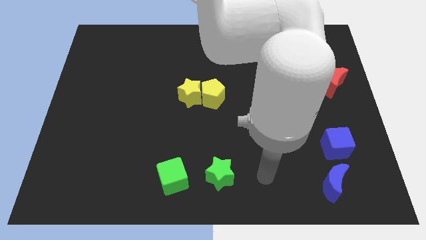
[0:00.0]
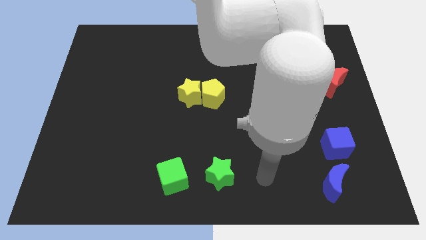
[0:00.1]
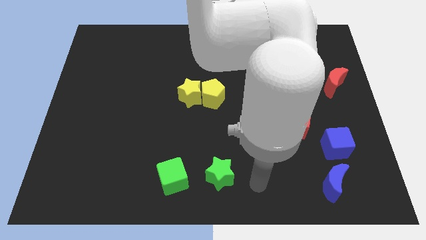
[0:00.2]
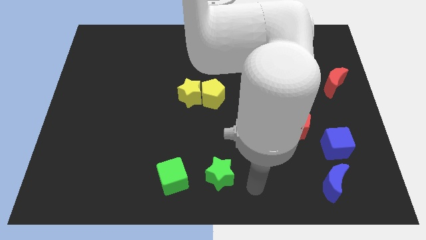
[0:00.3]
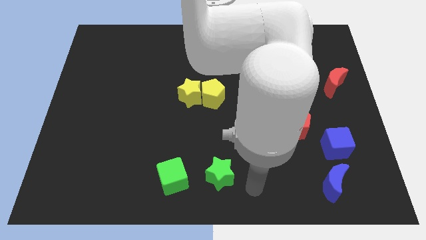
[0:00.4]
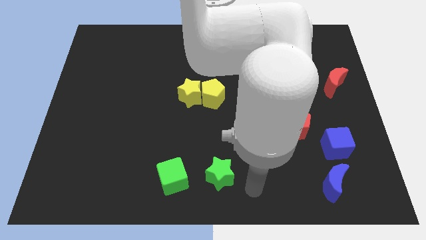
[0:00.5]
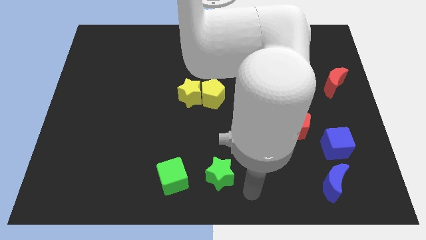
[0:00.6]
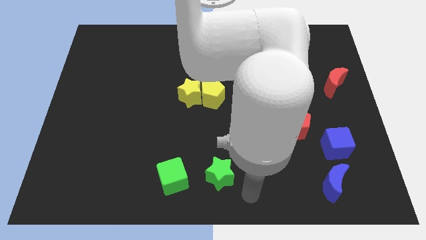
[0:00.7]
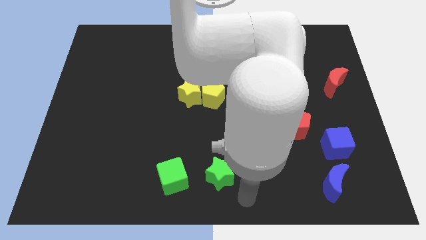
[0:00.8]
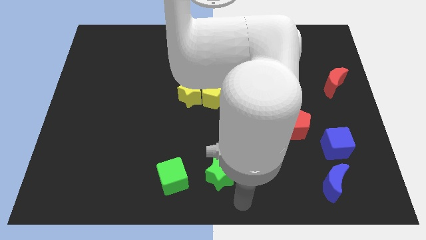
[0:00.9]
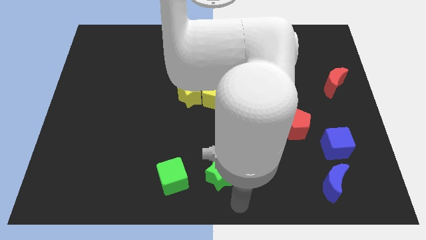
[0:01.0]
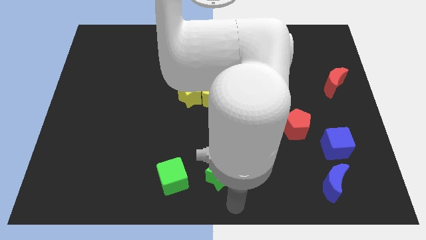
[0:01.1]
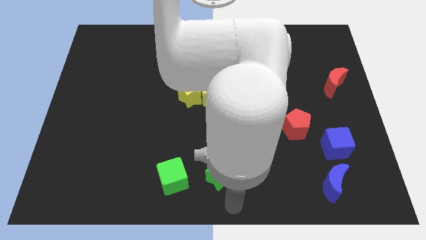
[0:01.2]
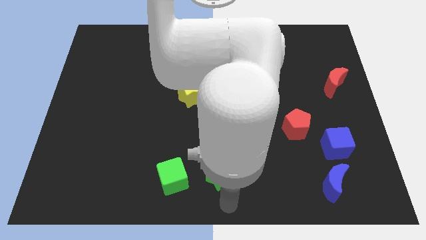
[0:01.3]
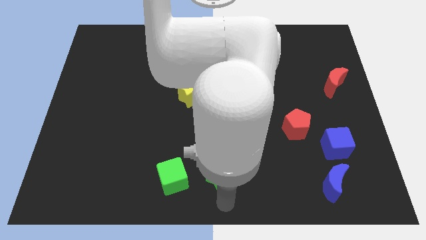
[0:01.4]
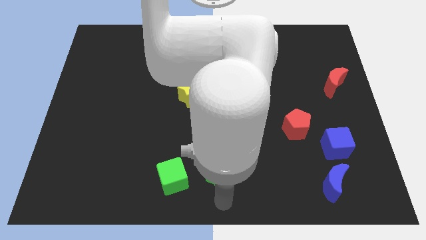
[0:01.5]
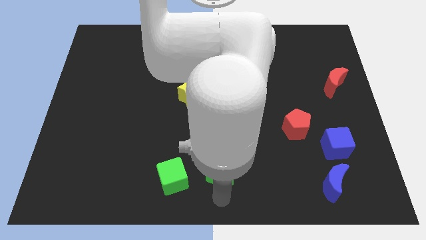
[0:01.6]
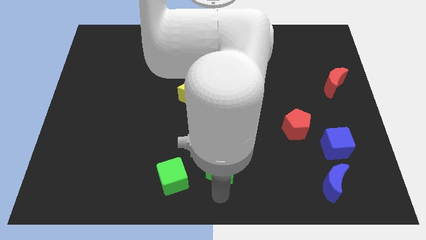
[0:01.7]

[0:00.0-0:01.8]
touch the green star

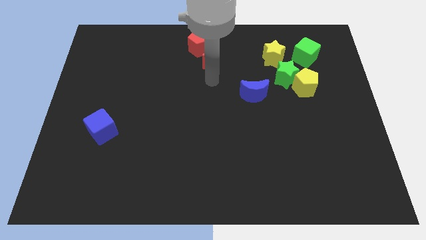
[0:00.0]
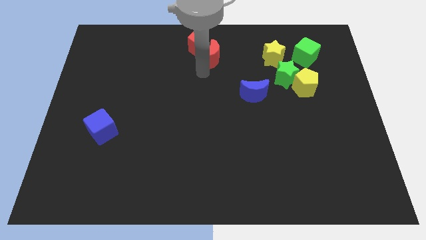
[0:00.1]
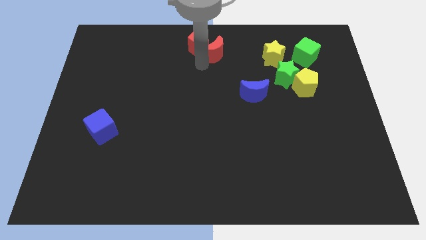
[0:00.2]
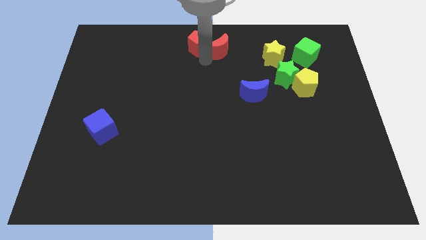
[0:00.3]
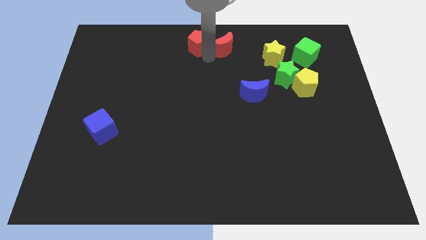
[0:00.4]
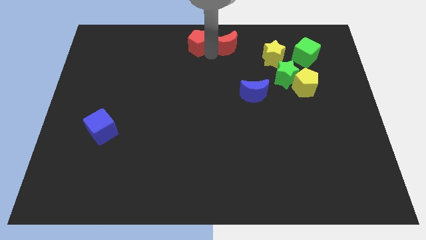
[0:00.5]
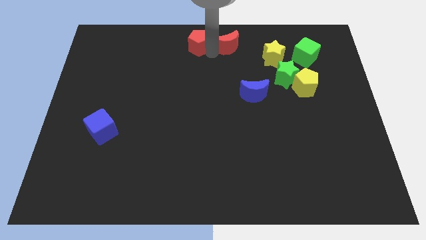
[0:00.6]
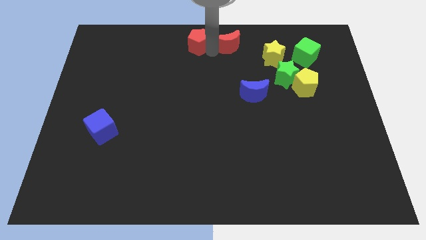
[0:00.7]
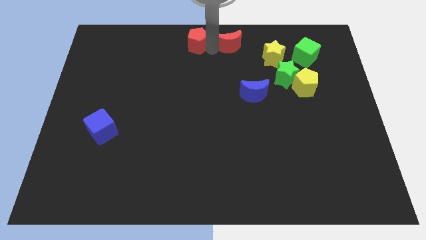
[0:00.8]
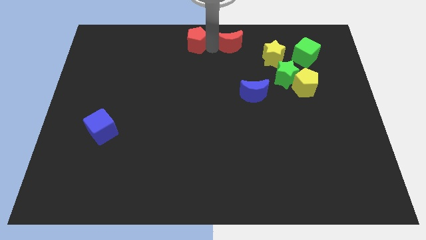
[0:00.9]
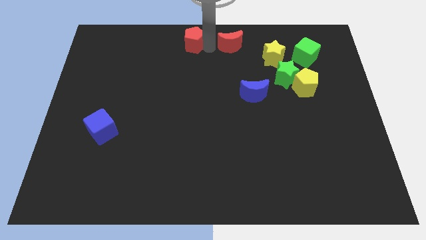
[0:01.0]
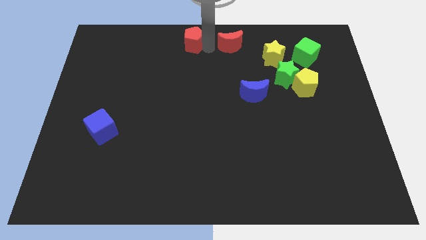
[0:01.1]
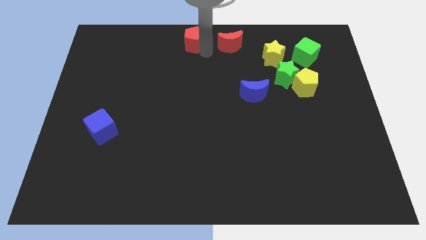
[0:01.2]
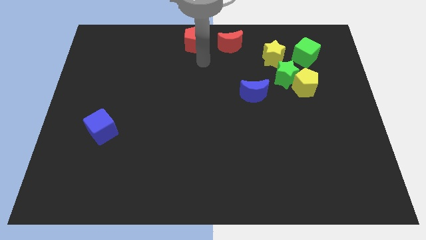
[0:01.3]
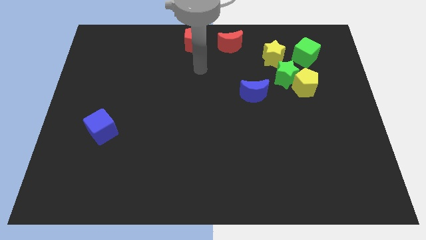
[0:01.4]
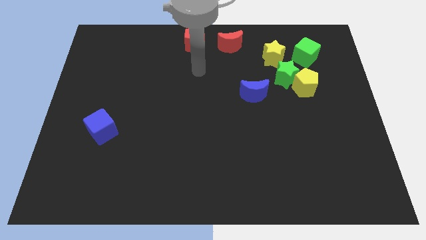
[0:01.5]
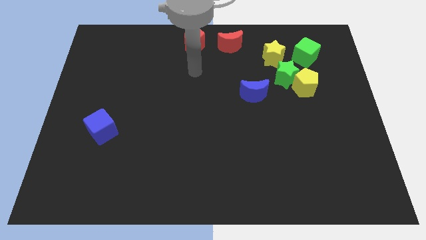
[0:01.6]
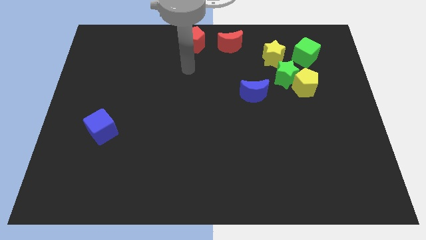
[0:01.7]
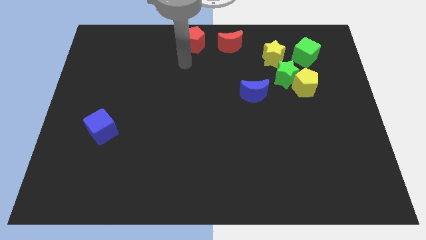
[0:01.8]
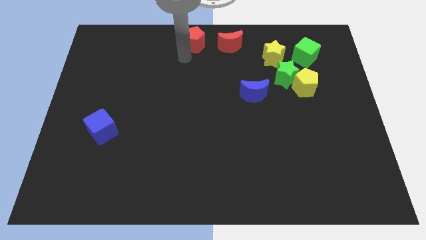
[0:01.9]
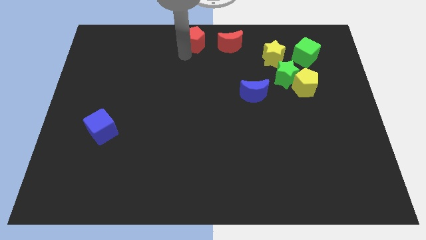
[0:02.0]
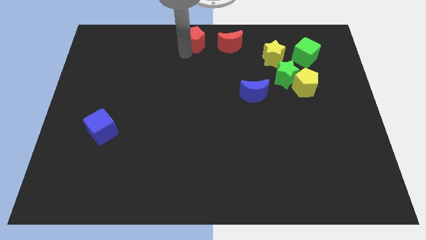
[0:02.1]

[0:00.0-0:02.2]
separate red crescent from red pentagon

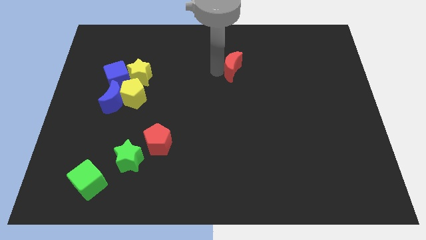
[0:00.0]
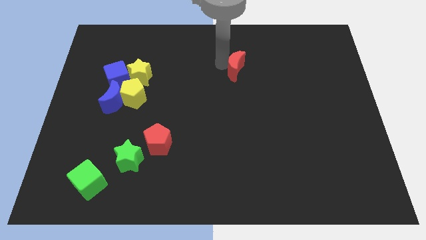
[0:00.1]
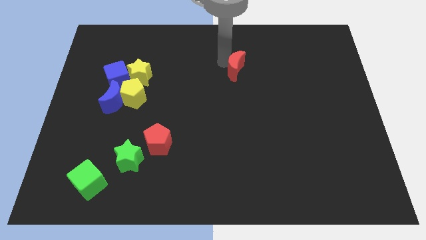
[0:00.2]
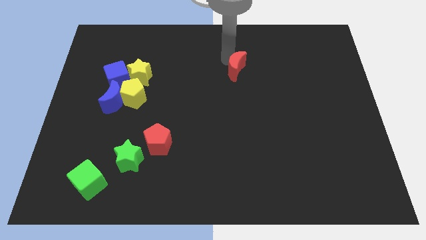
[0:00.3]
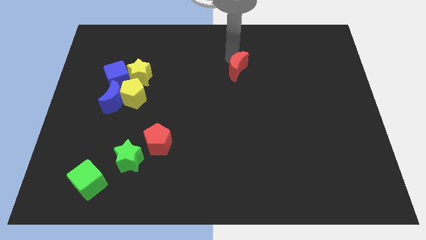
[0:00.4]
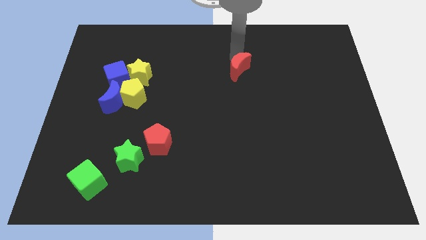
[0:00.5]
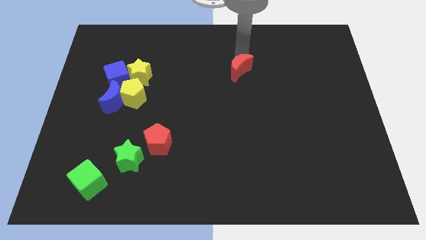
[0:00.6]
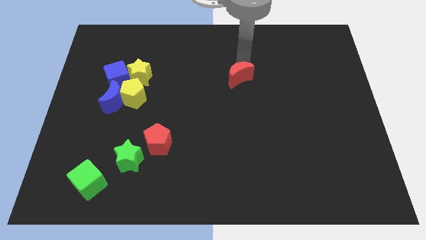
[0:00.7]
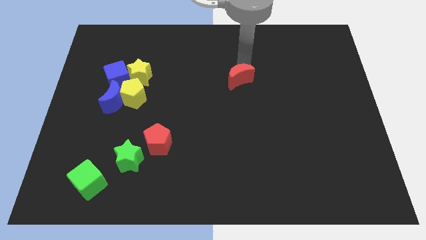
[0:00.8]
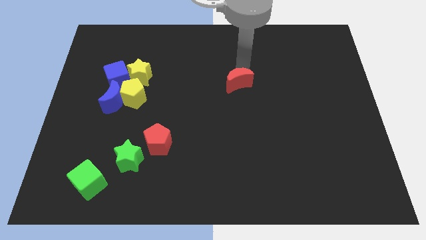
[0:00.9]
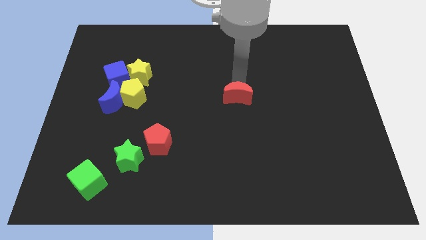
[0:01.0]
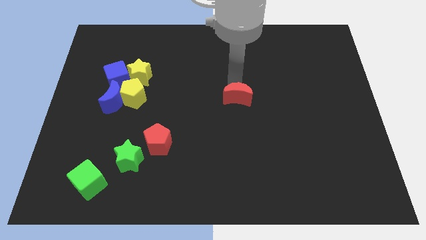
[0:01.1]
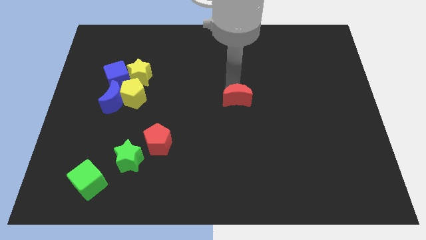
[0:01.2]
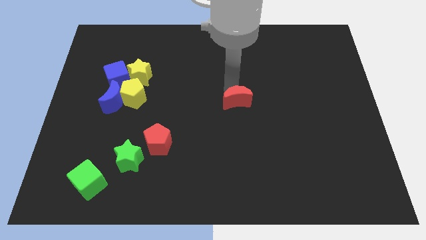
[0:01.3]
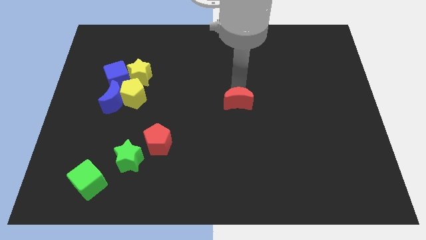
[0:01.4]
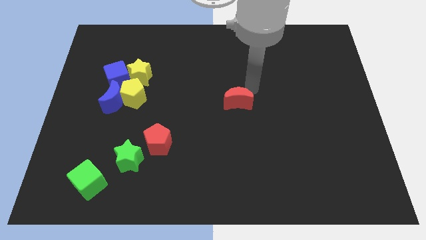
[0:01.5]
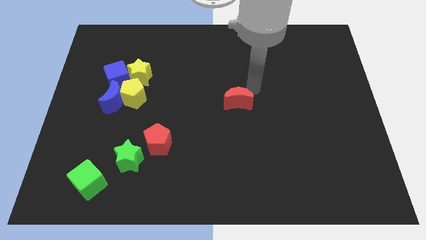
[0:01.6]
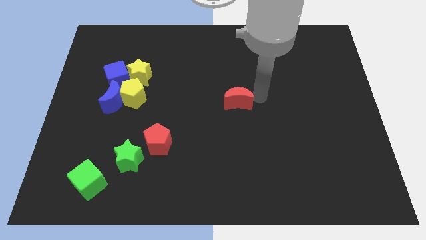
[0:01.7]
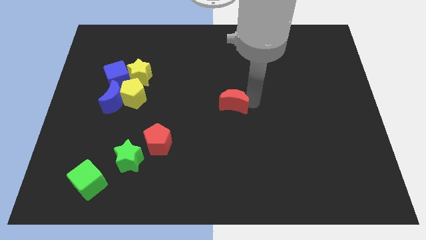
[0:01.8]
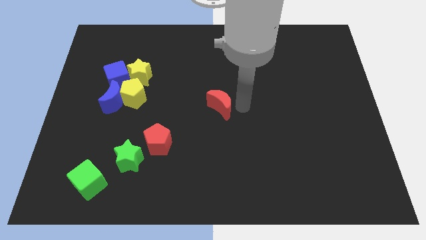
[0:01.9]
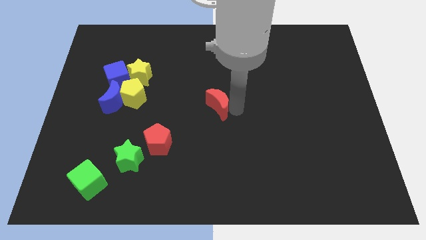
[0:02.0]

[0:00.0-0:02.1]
move the red crescent towards the center

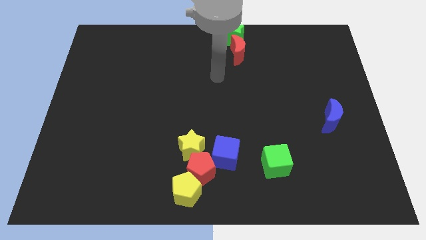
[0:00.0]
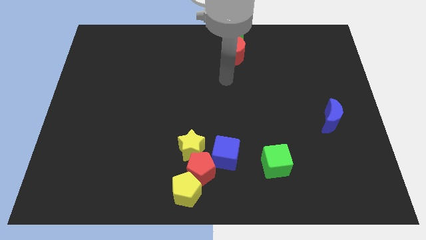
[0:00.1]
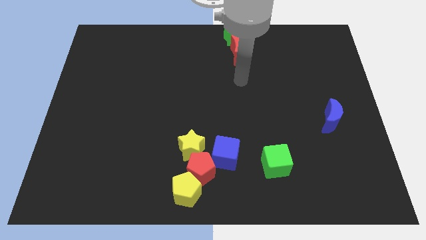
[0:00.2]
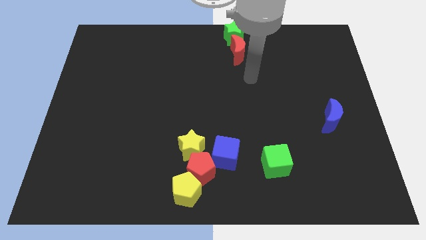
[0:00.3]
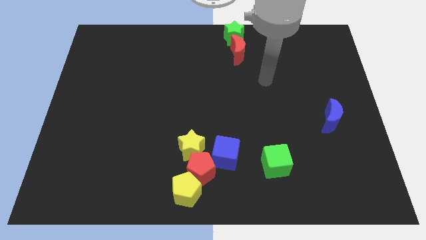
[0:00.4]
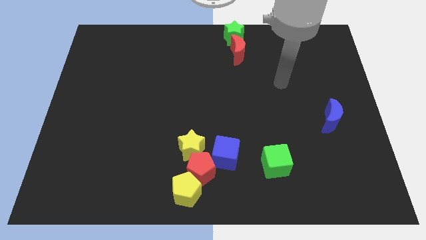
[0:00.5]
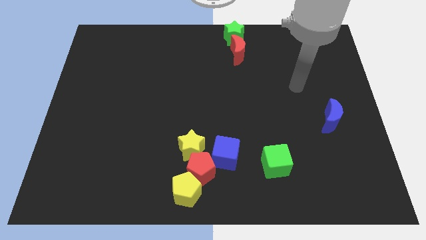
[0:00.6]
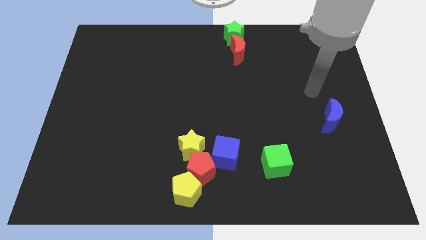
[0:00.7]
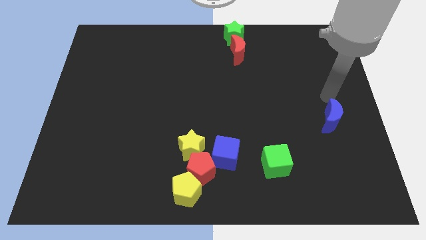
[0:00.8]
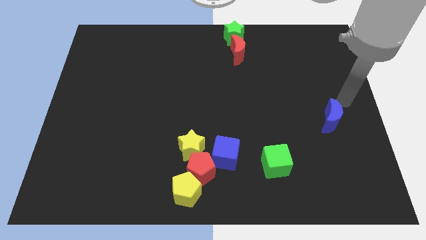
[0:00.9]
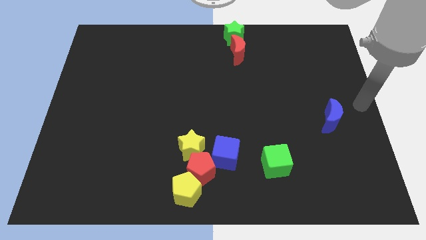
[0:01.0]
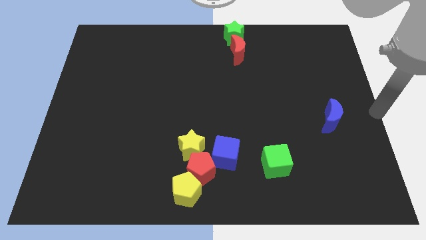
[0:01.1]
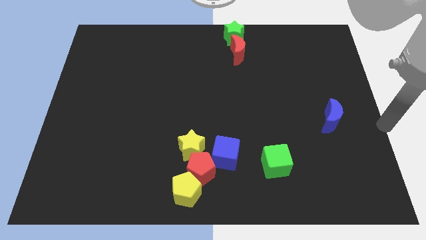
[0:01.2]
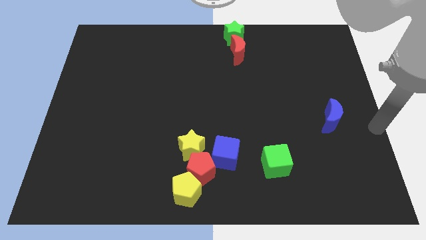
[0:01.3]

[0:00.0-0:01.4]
move arm away from red moon

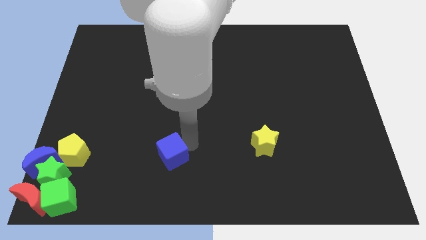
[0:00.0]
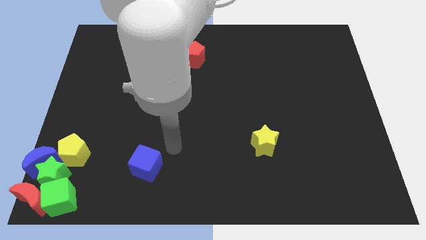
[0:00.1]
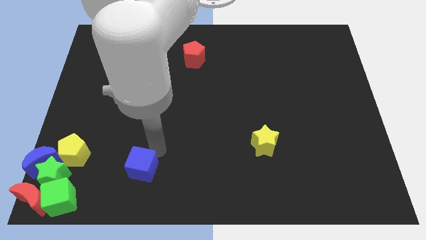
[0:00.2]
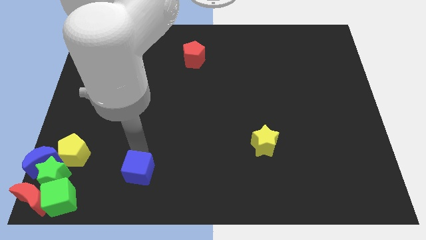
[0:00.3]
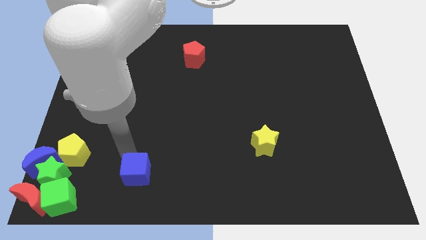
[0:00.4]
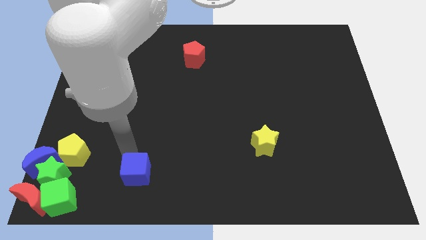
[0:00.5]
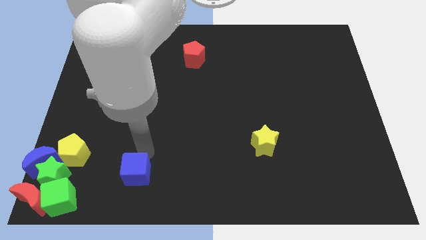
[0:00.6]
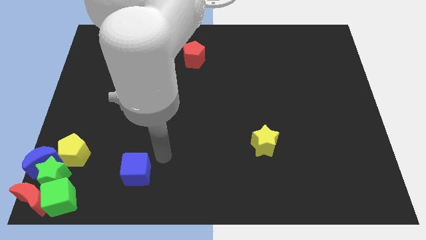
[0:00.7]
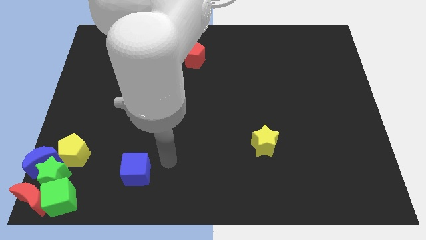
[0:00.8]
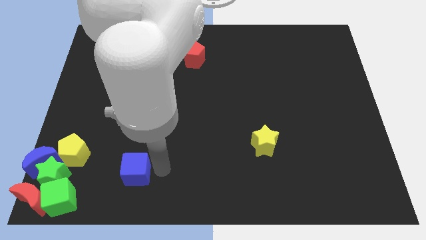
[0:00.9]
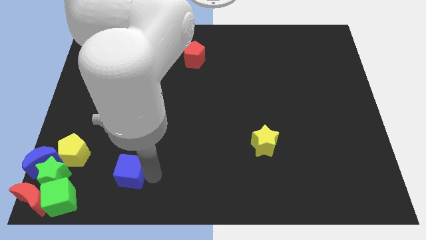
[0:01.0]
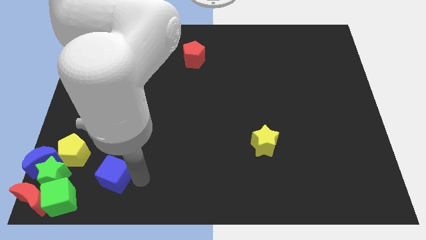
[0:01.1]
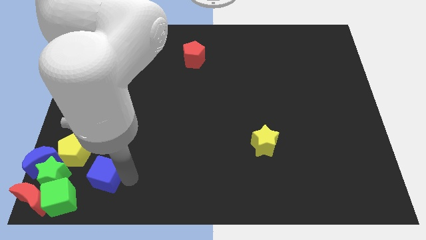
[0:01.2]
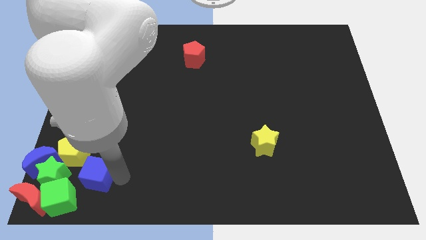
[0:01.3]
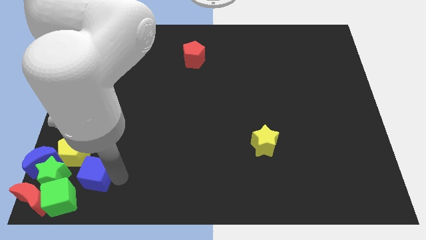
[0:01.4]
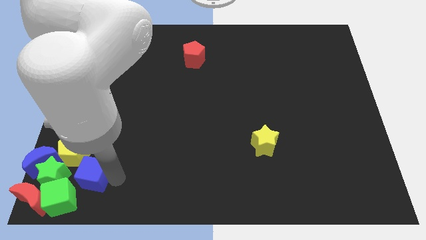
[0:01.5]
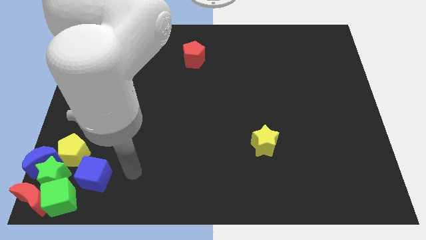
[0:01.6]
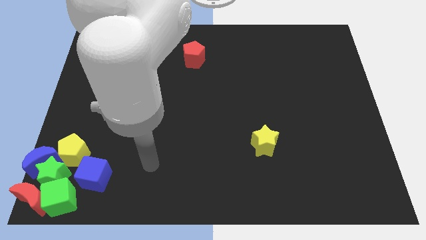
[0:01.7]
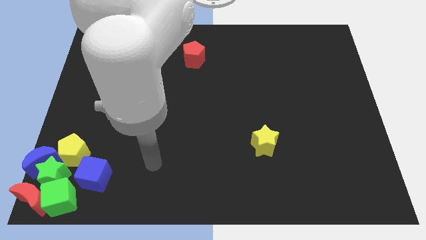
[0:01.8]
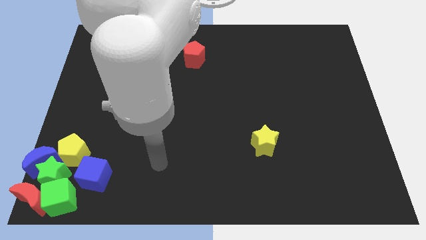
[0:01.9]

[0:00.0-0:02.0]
push the blue cube to the left side of the board
